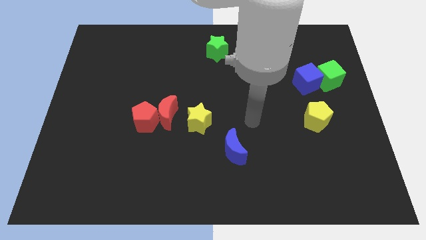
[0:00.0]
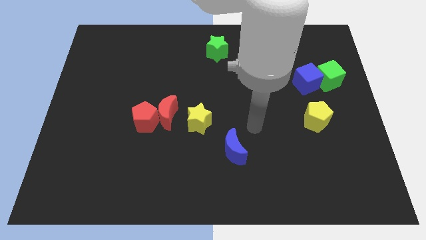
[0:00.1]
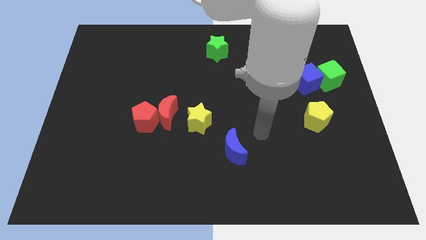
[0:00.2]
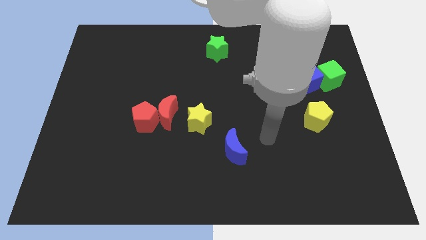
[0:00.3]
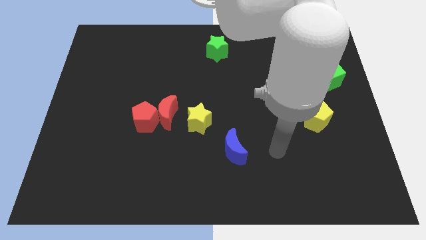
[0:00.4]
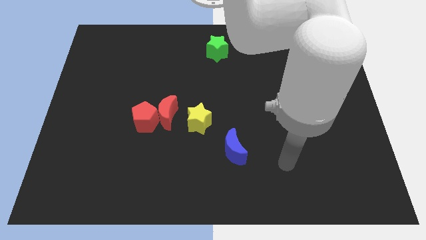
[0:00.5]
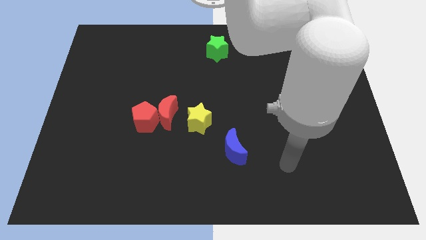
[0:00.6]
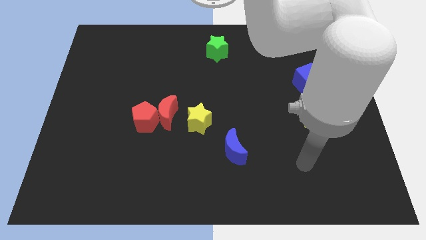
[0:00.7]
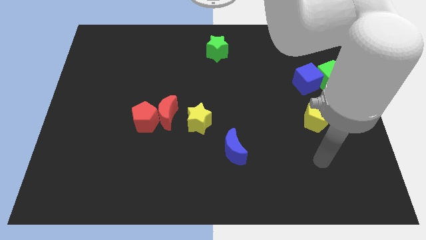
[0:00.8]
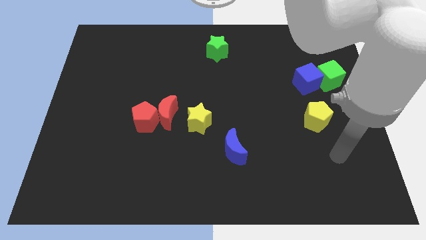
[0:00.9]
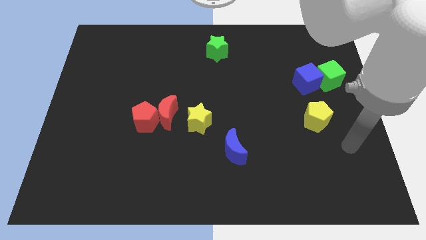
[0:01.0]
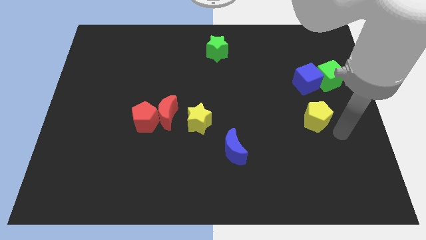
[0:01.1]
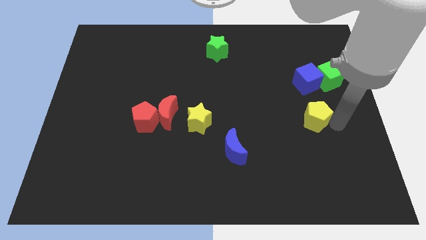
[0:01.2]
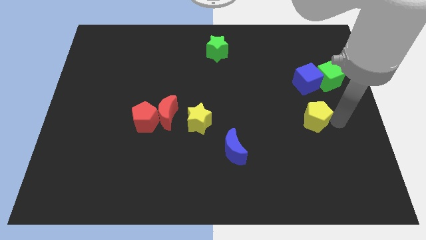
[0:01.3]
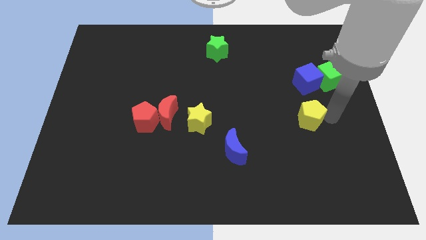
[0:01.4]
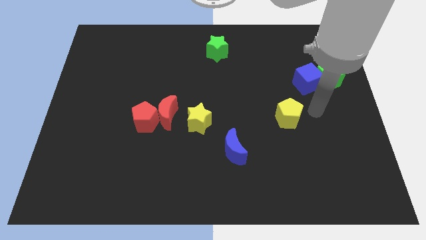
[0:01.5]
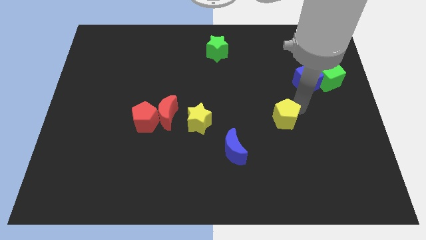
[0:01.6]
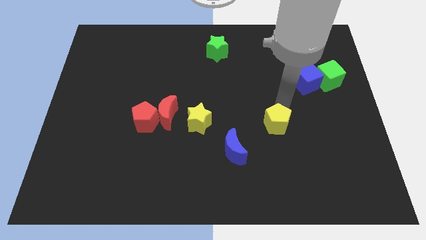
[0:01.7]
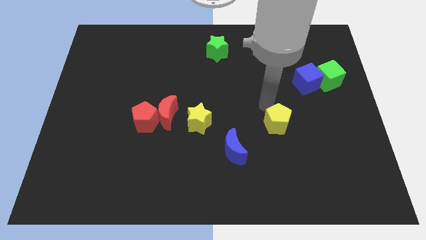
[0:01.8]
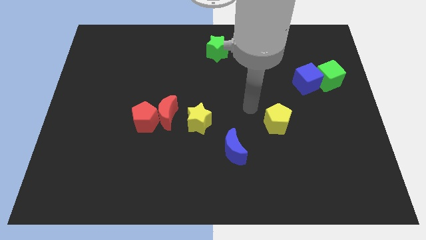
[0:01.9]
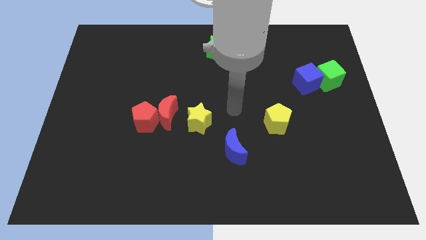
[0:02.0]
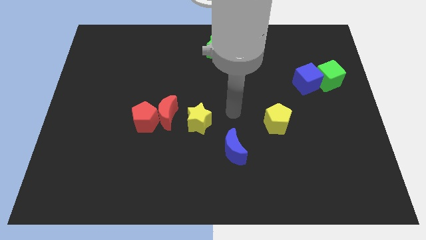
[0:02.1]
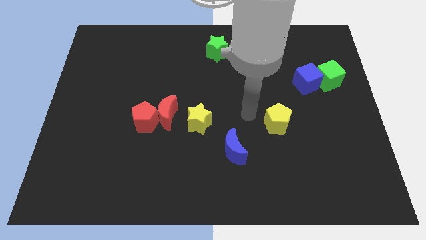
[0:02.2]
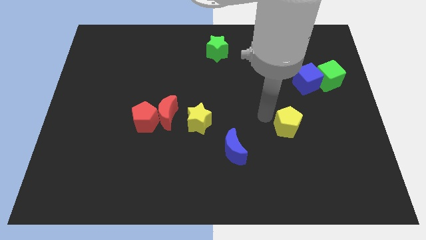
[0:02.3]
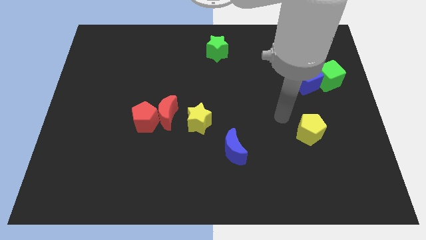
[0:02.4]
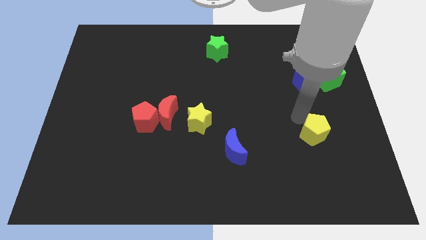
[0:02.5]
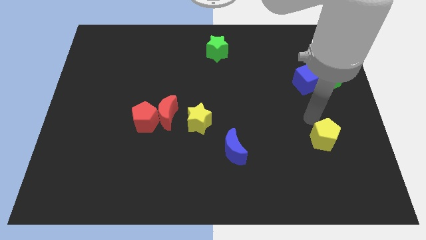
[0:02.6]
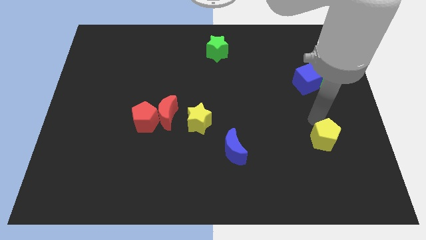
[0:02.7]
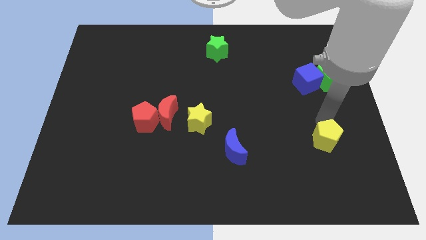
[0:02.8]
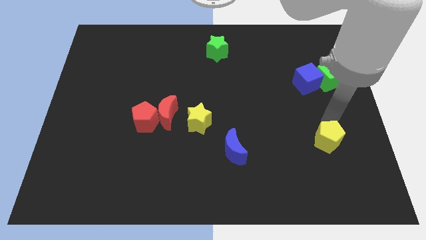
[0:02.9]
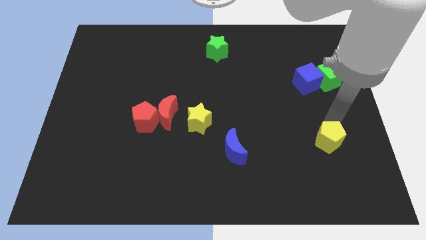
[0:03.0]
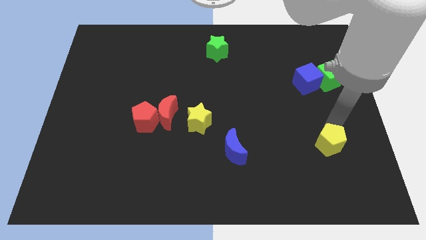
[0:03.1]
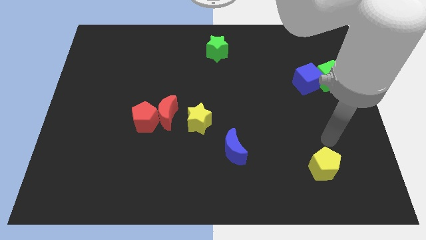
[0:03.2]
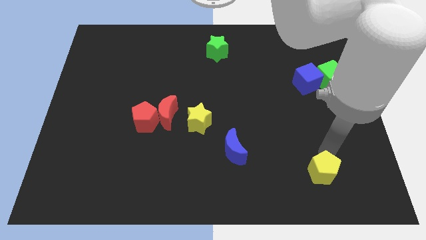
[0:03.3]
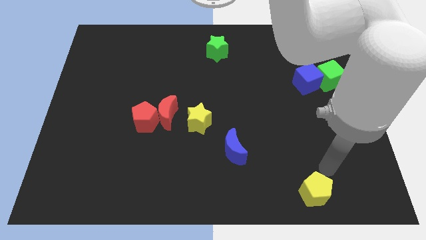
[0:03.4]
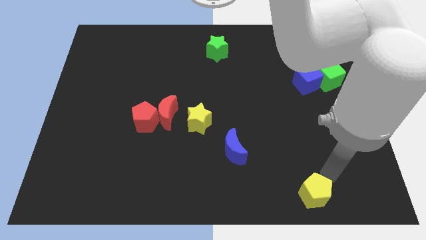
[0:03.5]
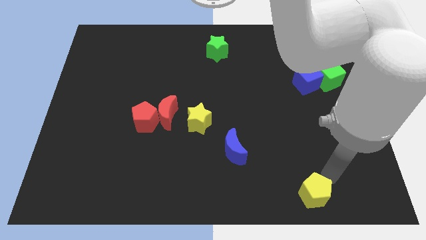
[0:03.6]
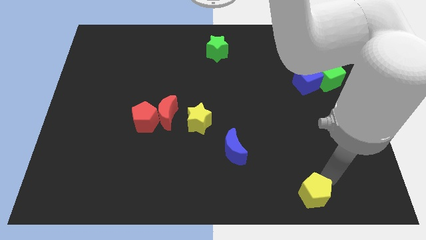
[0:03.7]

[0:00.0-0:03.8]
move the yellow pentagon to the bottom of the board

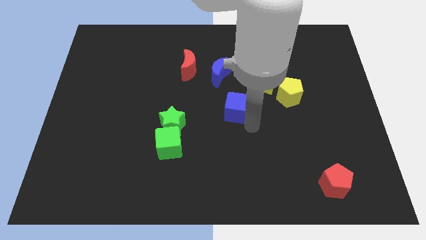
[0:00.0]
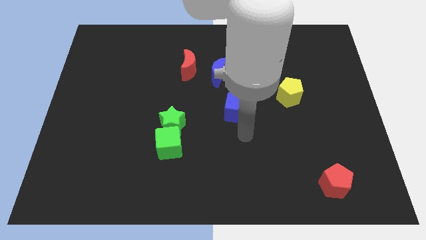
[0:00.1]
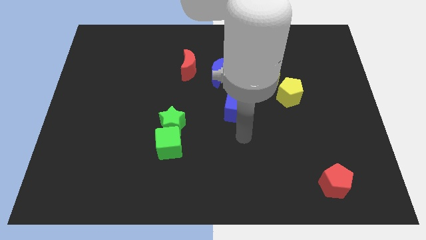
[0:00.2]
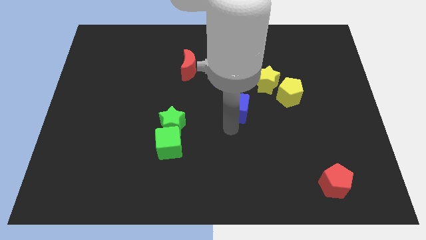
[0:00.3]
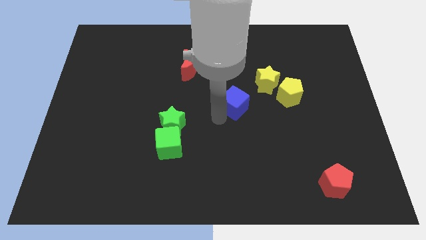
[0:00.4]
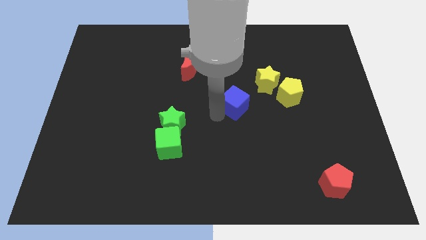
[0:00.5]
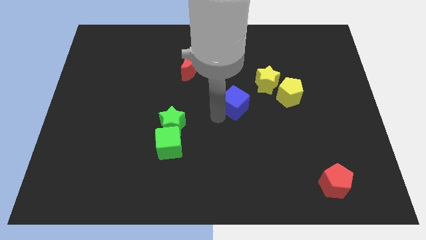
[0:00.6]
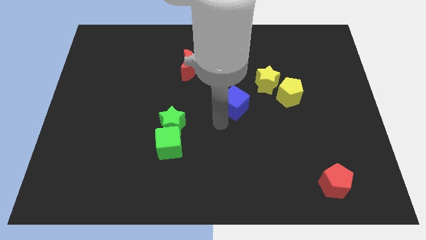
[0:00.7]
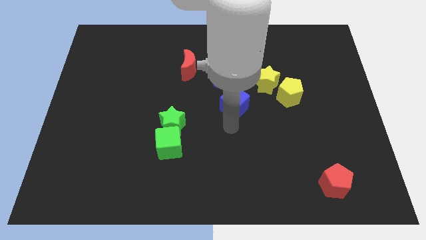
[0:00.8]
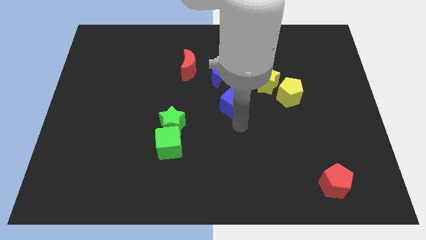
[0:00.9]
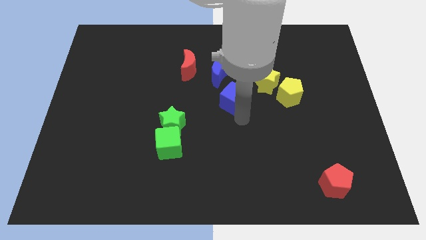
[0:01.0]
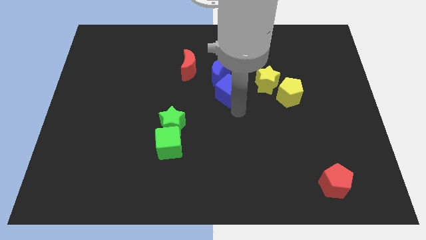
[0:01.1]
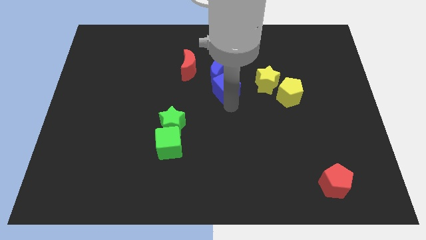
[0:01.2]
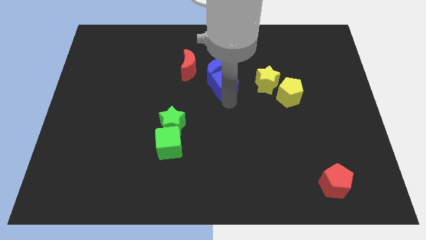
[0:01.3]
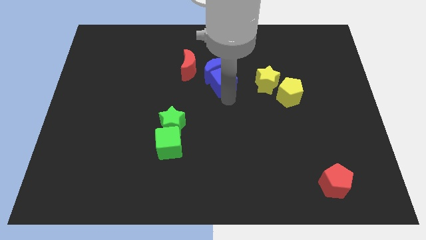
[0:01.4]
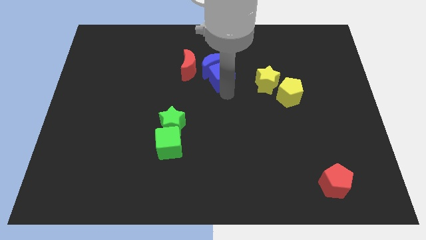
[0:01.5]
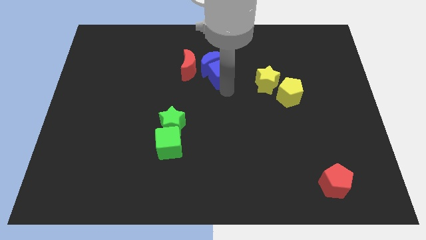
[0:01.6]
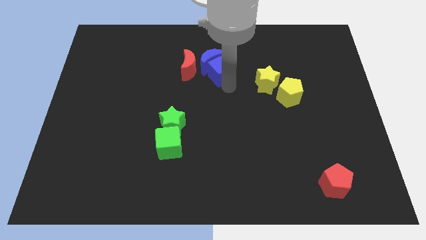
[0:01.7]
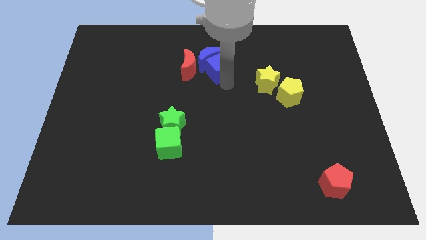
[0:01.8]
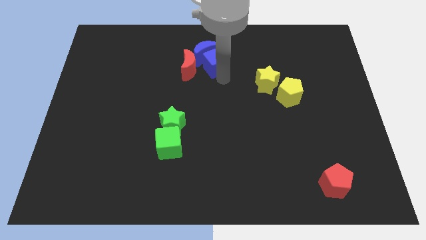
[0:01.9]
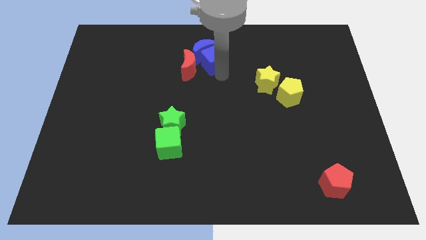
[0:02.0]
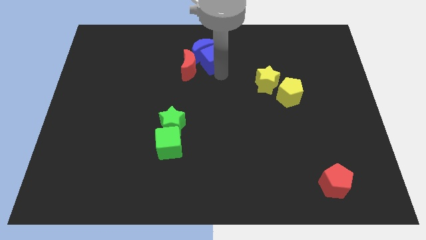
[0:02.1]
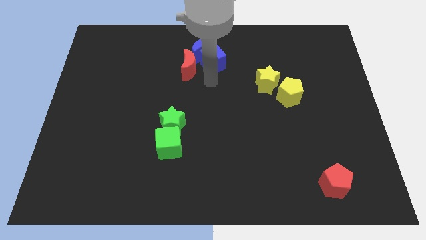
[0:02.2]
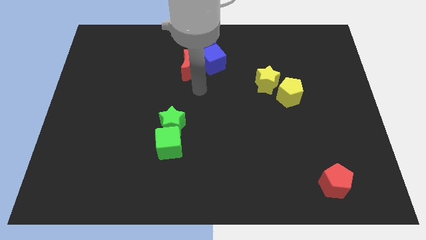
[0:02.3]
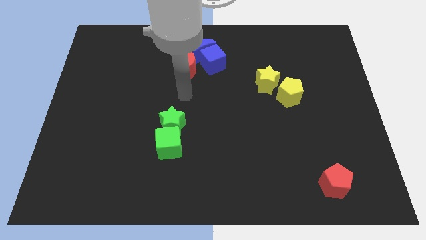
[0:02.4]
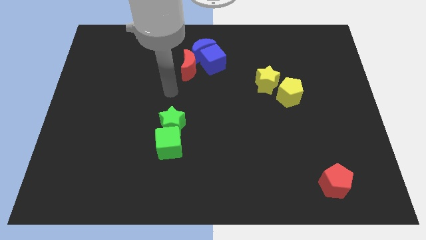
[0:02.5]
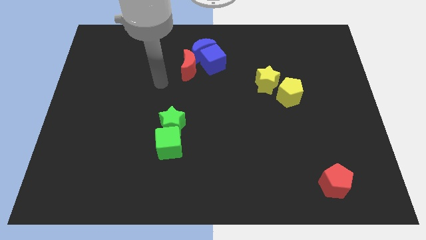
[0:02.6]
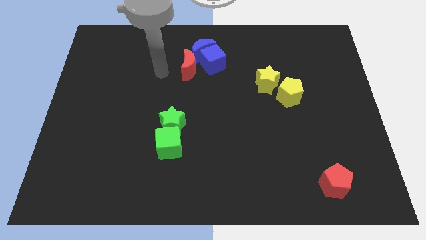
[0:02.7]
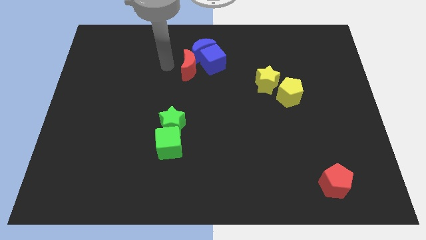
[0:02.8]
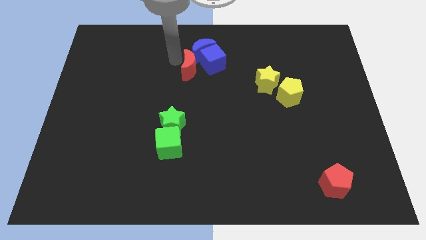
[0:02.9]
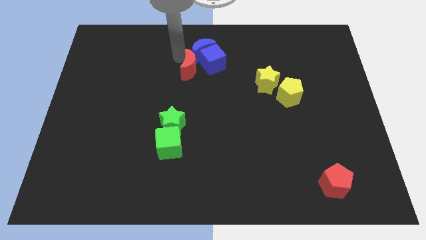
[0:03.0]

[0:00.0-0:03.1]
push the blue cube into the blue moon

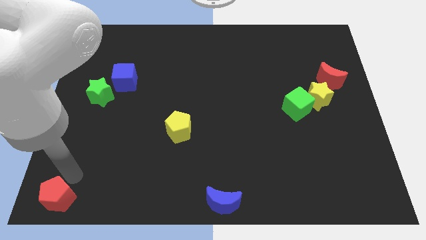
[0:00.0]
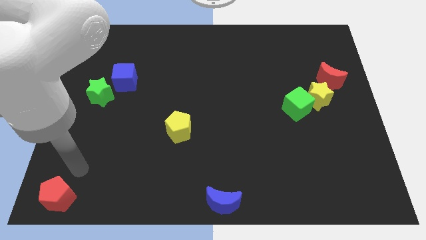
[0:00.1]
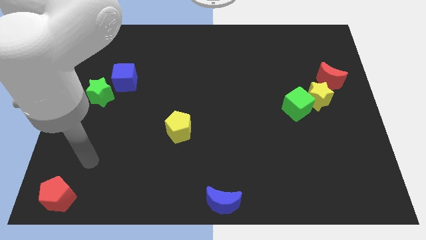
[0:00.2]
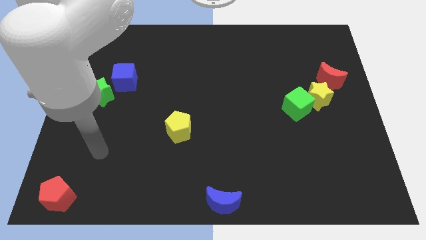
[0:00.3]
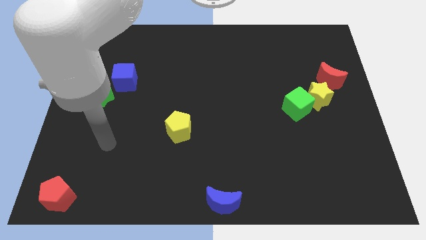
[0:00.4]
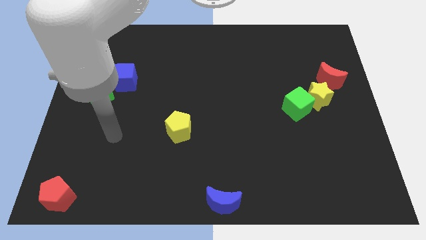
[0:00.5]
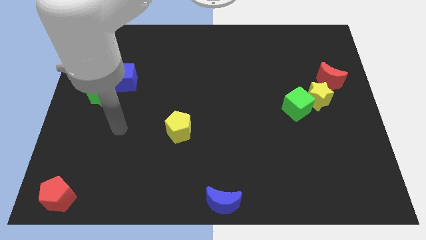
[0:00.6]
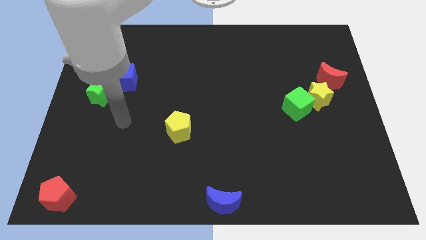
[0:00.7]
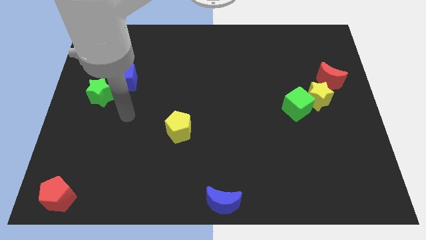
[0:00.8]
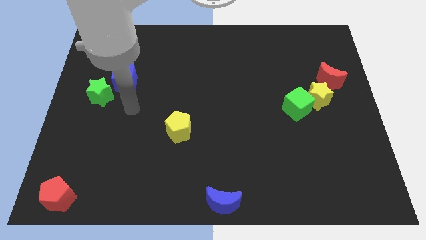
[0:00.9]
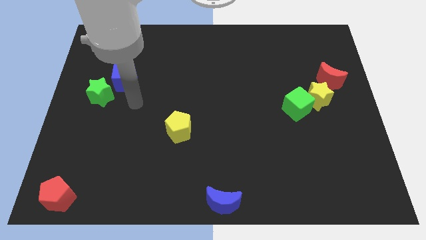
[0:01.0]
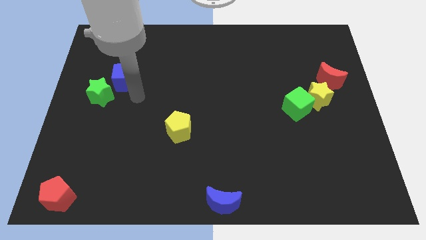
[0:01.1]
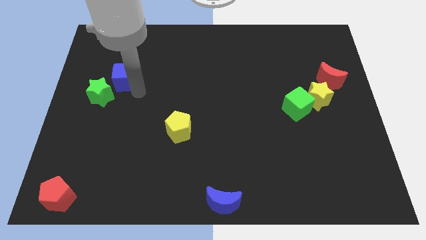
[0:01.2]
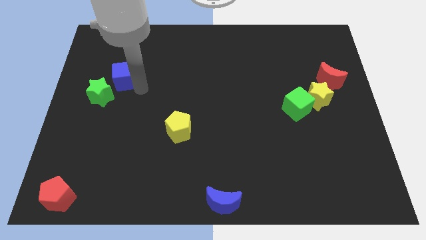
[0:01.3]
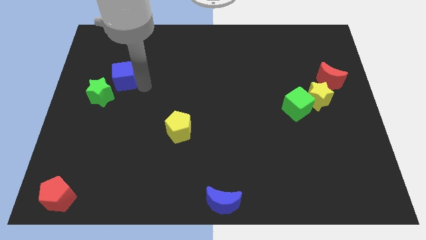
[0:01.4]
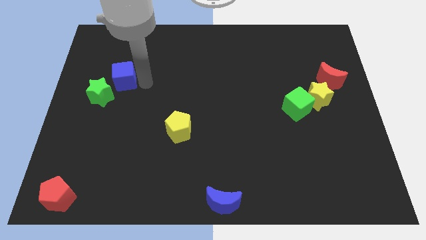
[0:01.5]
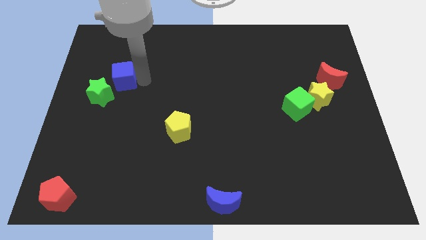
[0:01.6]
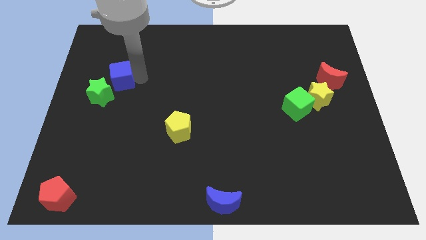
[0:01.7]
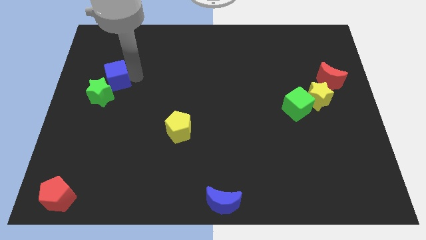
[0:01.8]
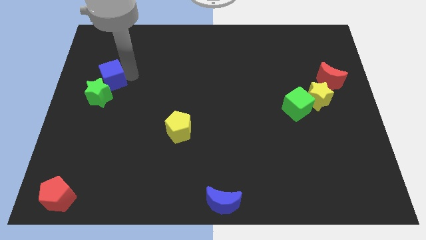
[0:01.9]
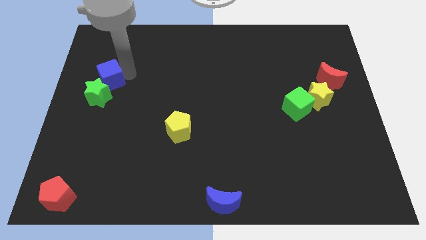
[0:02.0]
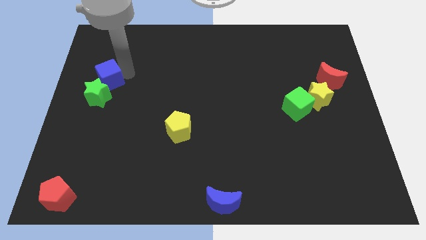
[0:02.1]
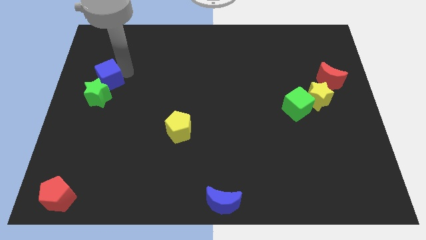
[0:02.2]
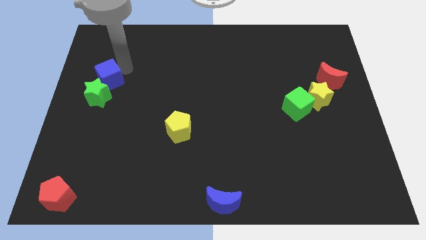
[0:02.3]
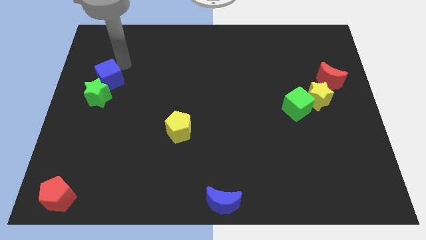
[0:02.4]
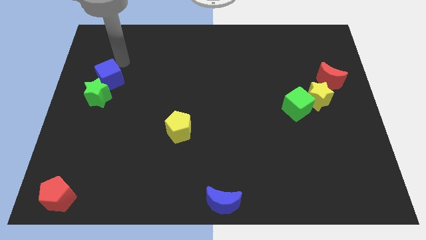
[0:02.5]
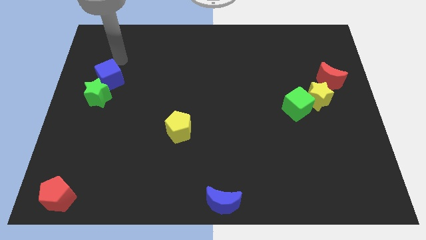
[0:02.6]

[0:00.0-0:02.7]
move the arm towards blue cube
